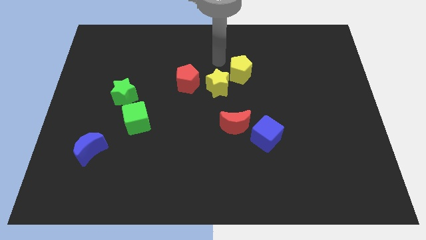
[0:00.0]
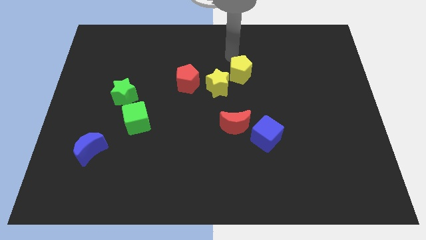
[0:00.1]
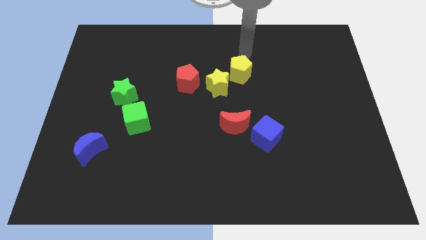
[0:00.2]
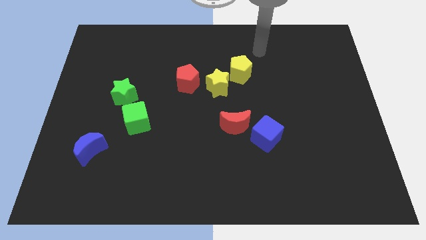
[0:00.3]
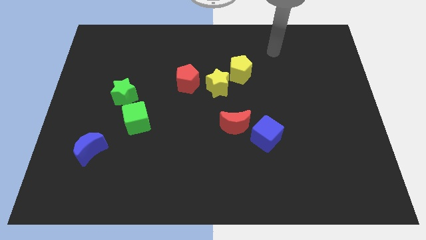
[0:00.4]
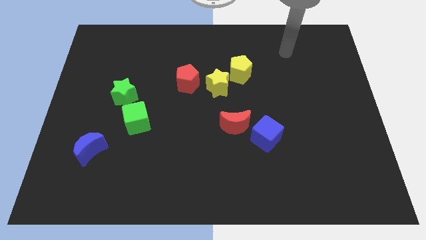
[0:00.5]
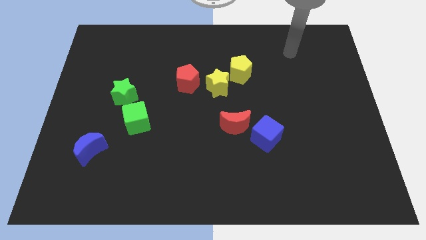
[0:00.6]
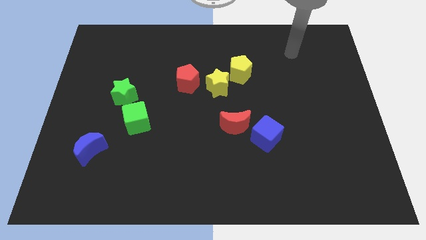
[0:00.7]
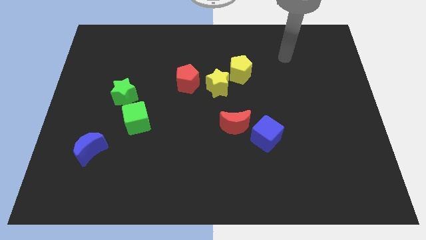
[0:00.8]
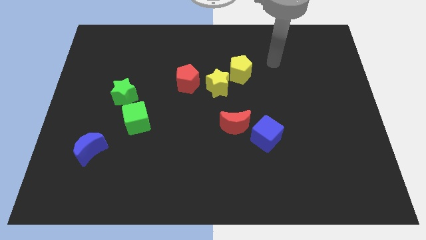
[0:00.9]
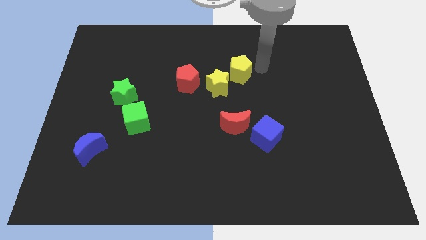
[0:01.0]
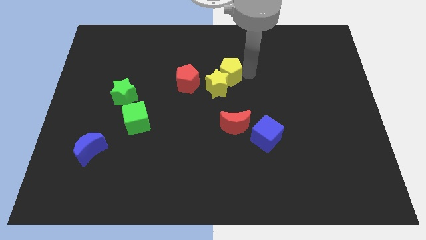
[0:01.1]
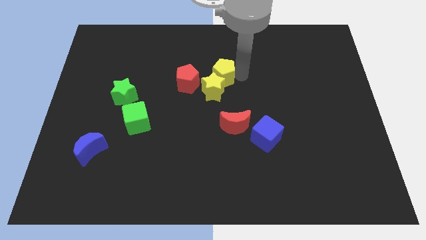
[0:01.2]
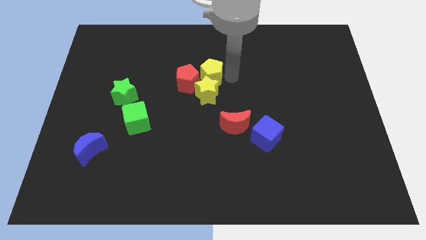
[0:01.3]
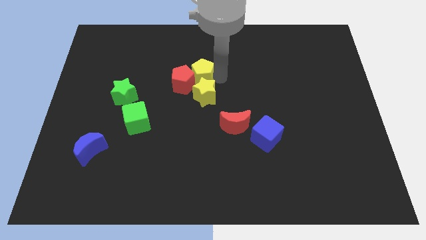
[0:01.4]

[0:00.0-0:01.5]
push yellow pentagon to the top of the yellow star

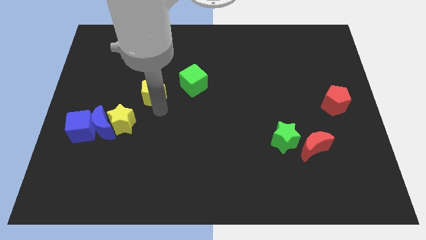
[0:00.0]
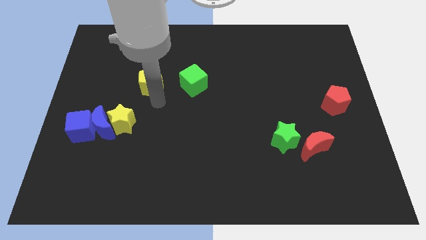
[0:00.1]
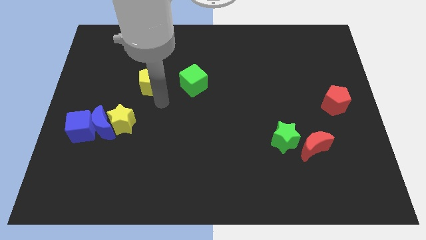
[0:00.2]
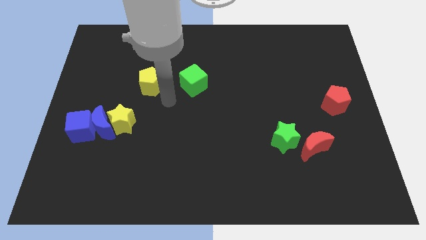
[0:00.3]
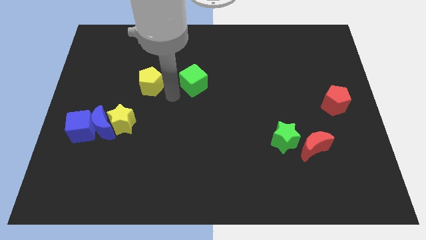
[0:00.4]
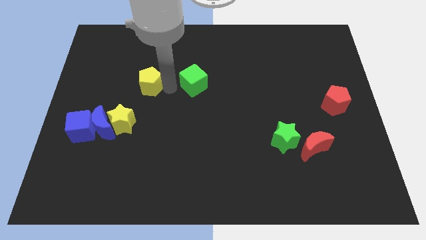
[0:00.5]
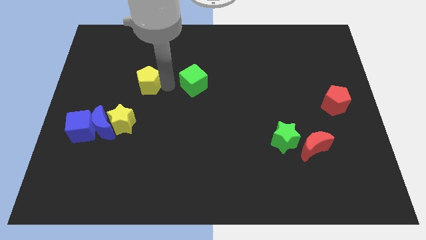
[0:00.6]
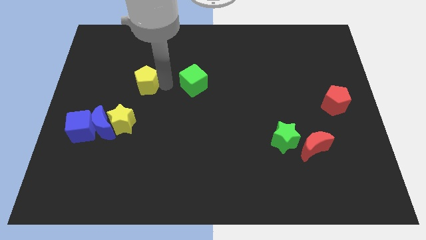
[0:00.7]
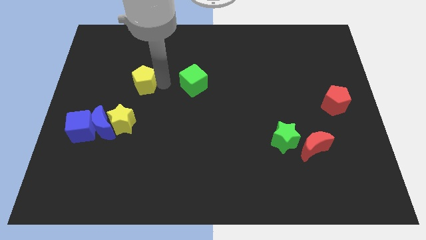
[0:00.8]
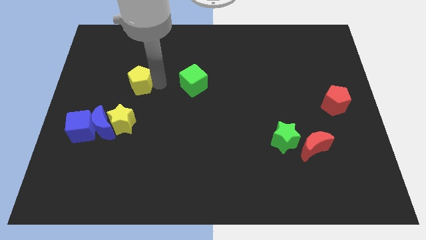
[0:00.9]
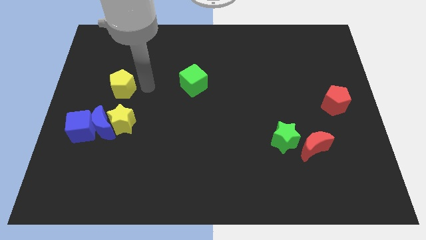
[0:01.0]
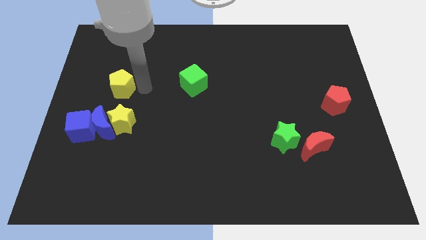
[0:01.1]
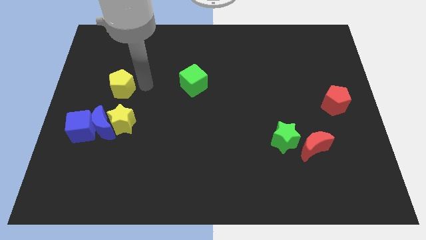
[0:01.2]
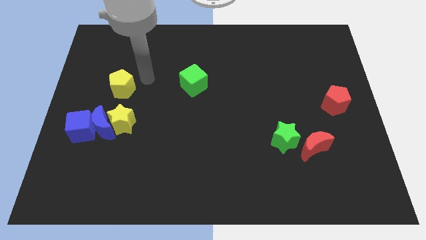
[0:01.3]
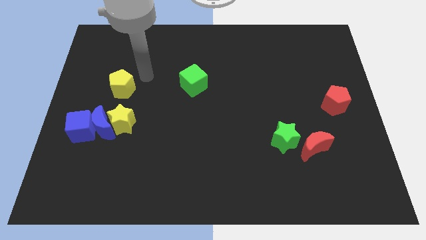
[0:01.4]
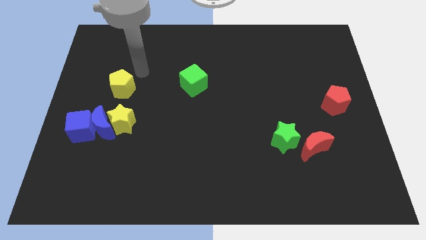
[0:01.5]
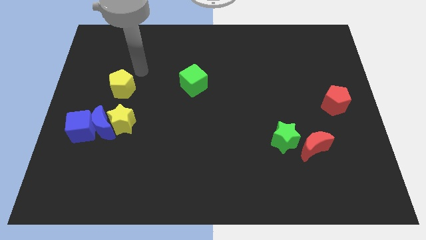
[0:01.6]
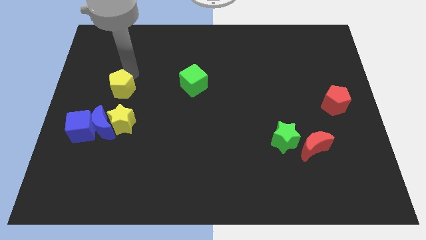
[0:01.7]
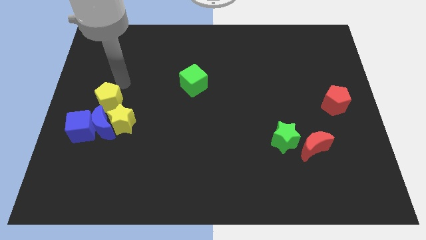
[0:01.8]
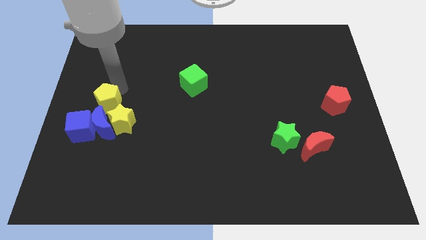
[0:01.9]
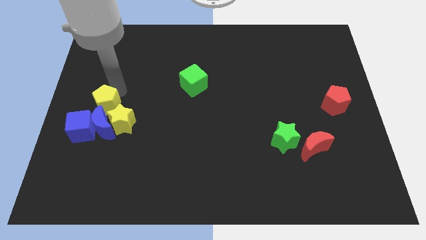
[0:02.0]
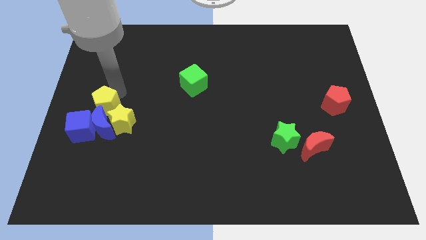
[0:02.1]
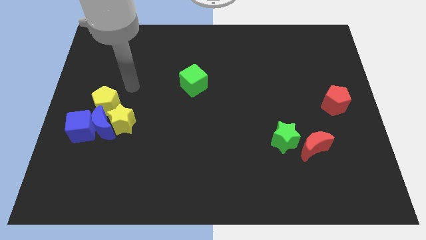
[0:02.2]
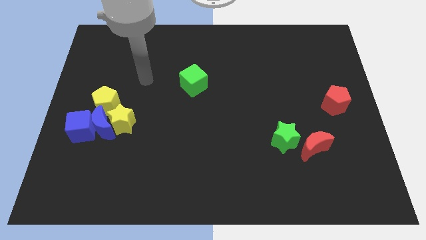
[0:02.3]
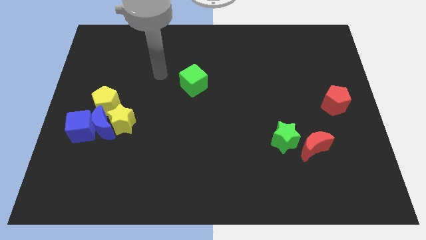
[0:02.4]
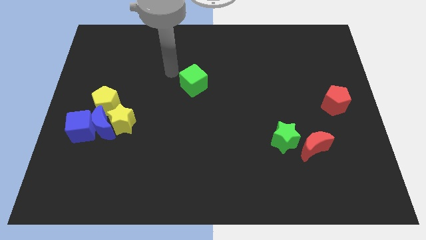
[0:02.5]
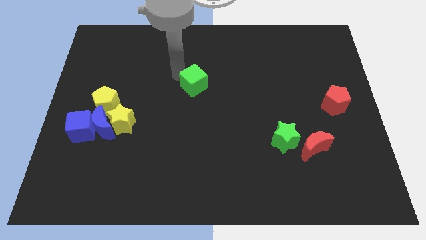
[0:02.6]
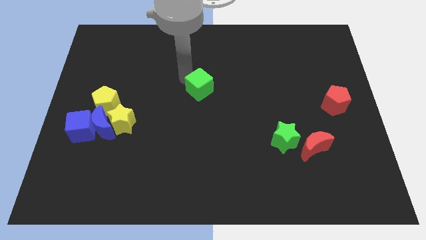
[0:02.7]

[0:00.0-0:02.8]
place the yellow pentagon above the blue moon

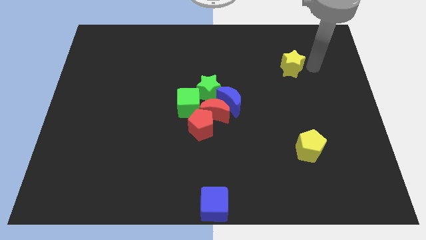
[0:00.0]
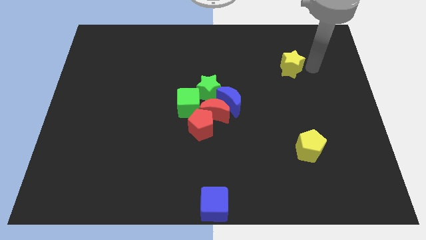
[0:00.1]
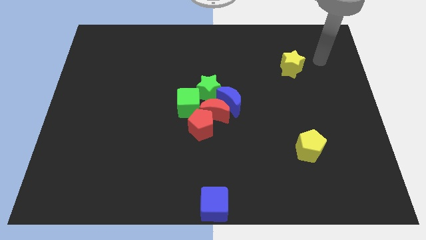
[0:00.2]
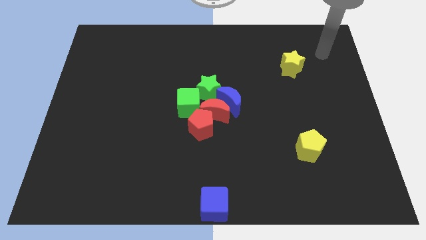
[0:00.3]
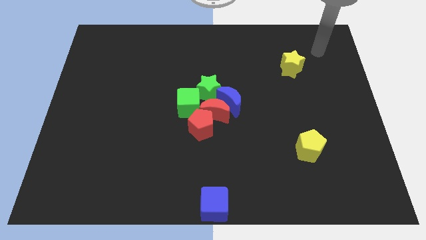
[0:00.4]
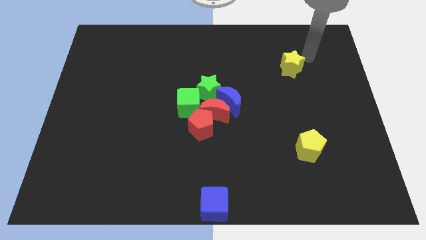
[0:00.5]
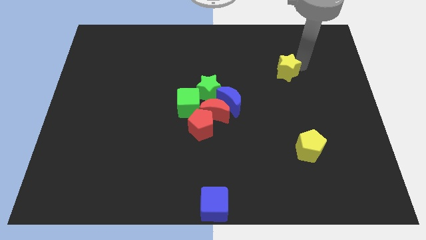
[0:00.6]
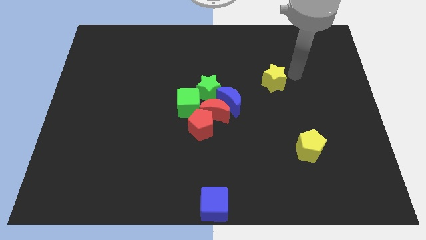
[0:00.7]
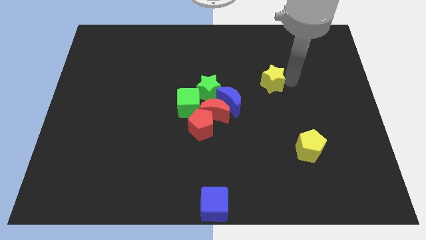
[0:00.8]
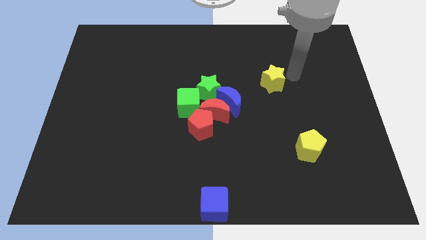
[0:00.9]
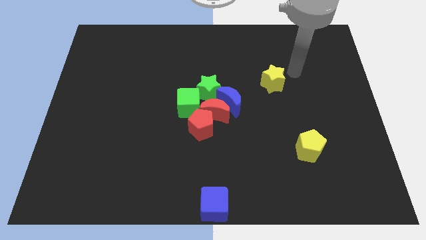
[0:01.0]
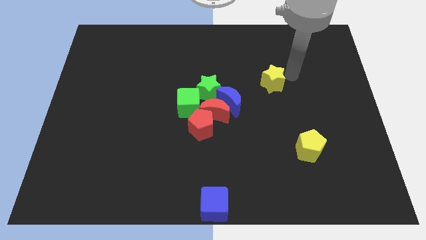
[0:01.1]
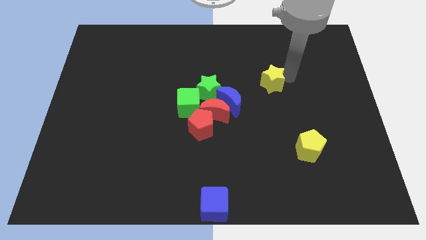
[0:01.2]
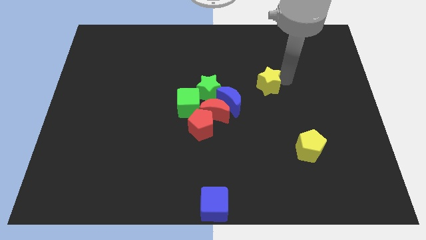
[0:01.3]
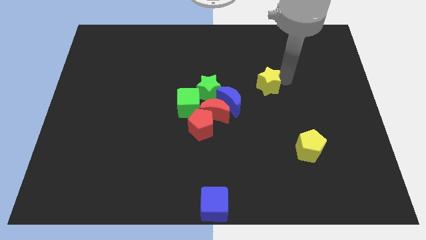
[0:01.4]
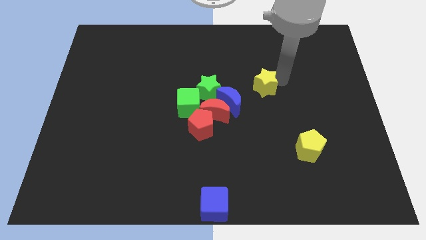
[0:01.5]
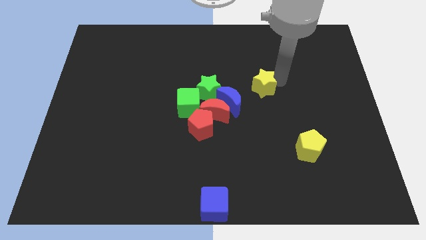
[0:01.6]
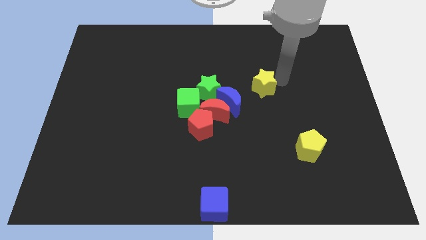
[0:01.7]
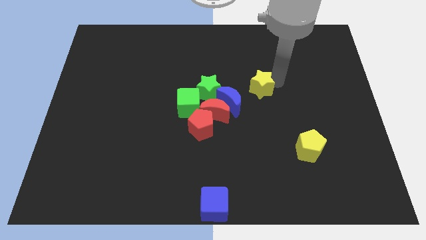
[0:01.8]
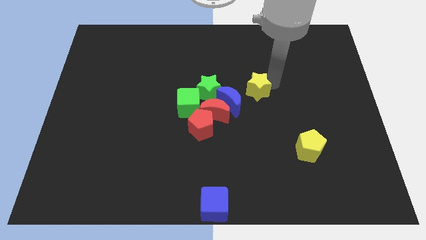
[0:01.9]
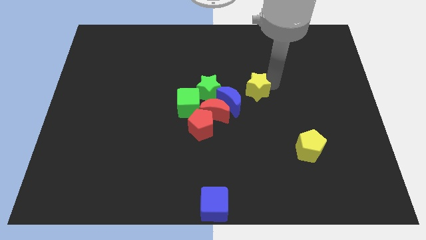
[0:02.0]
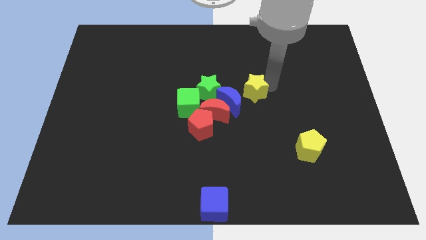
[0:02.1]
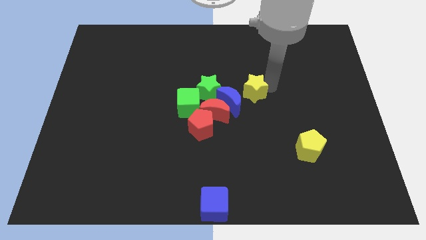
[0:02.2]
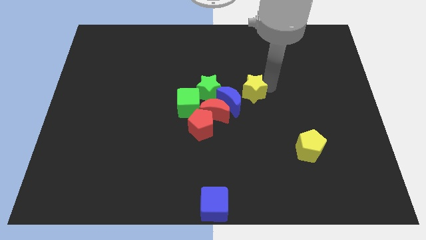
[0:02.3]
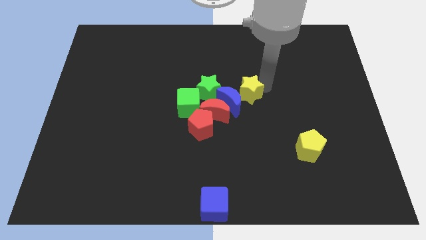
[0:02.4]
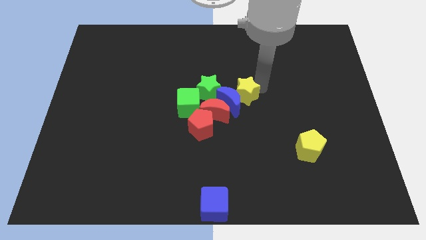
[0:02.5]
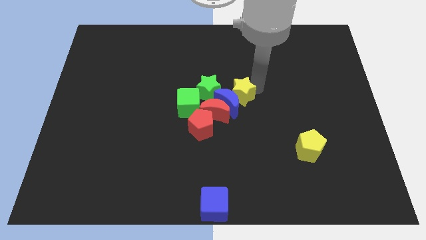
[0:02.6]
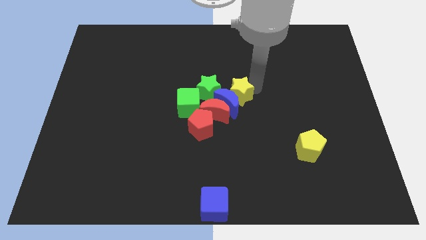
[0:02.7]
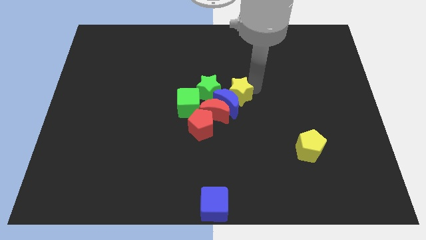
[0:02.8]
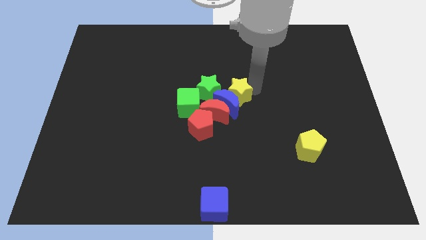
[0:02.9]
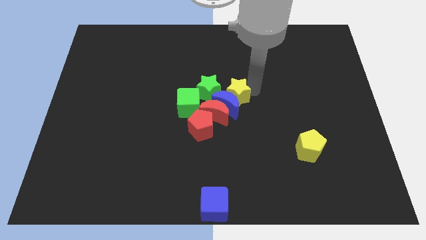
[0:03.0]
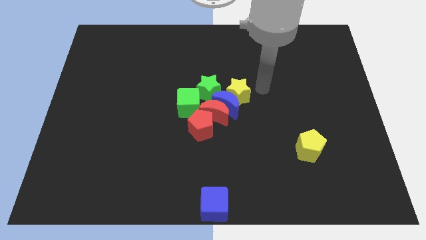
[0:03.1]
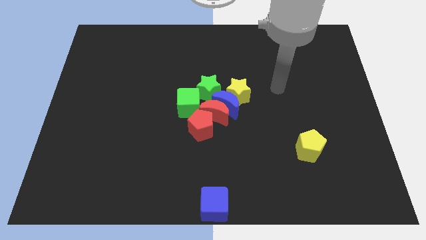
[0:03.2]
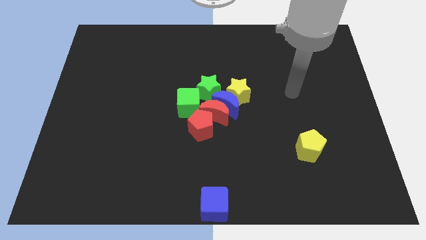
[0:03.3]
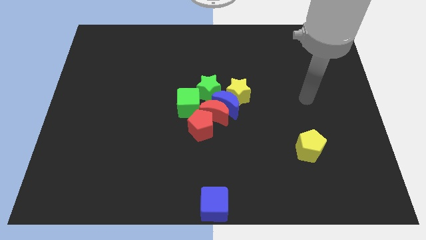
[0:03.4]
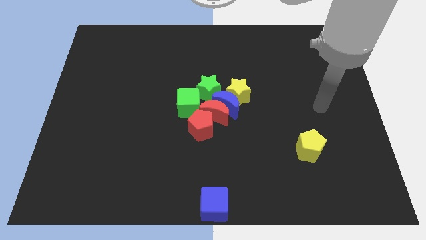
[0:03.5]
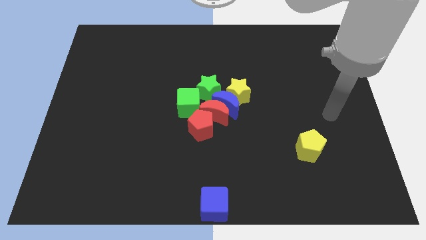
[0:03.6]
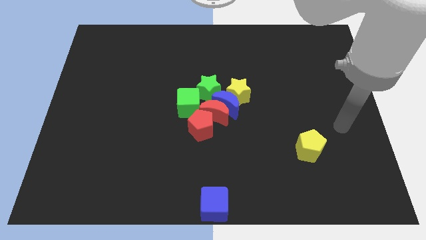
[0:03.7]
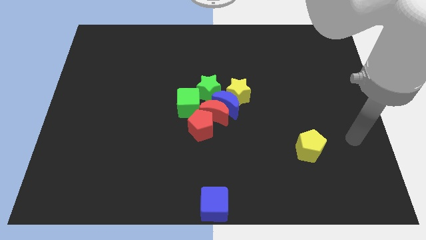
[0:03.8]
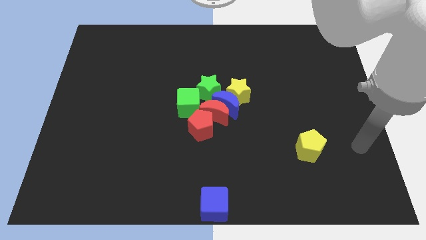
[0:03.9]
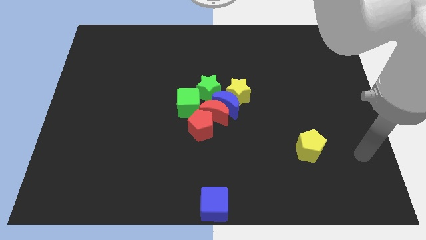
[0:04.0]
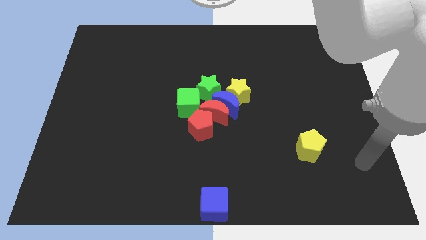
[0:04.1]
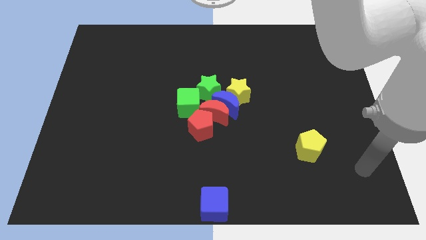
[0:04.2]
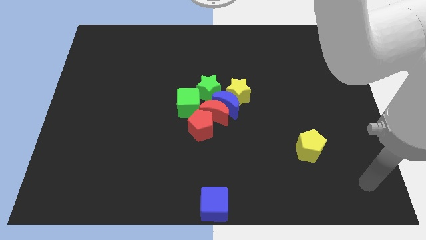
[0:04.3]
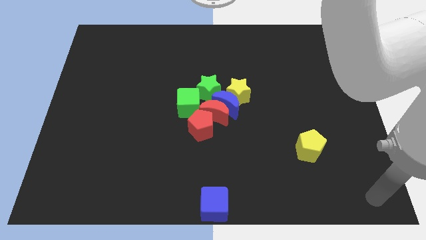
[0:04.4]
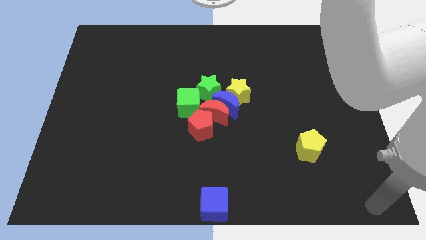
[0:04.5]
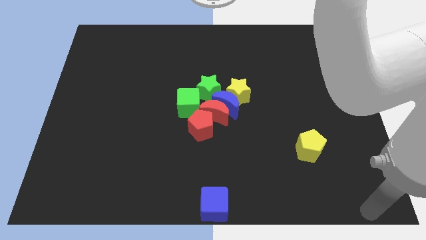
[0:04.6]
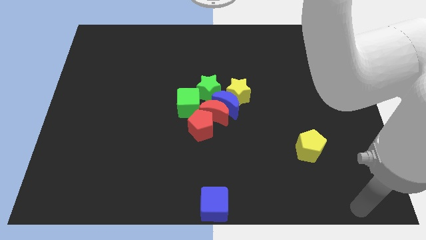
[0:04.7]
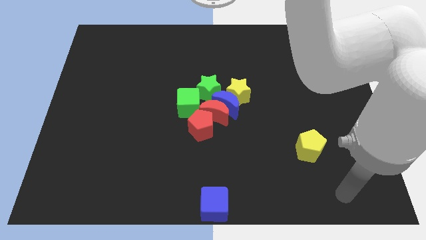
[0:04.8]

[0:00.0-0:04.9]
place the yellow star into the blue moon
